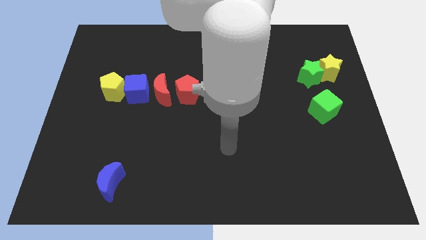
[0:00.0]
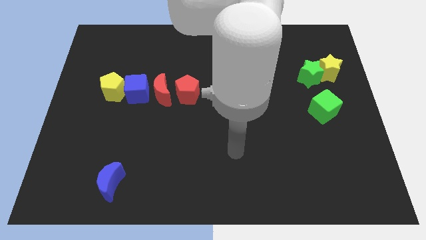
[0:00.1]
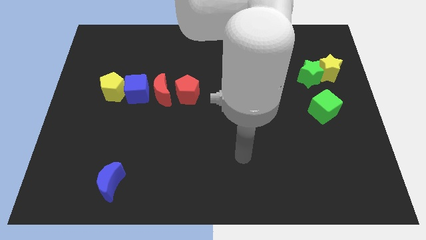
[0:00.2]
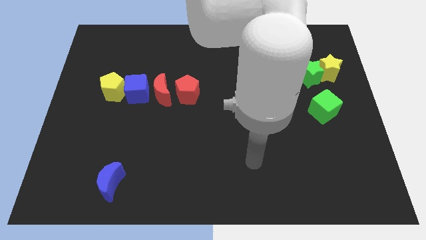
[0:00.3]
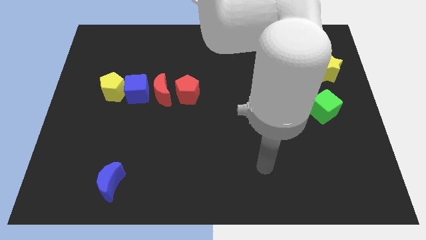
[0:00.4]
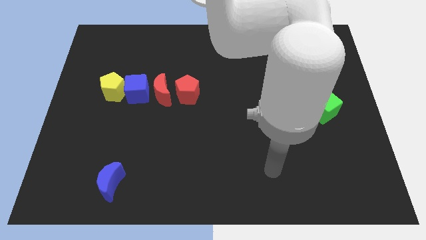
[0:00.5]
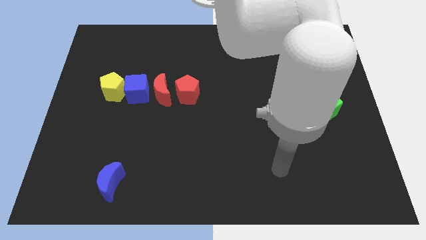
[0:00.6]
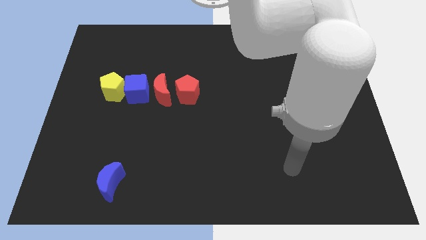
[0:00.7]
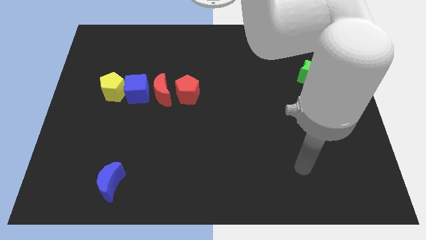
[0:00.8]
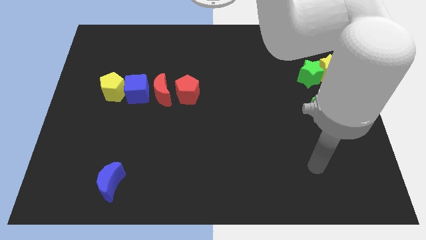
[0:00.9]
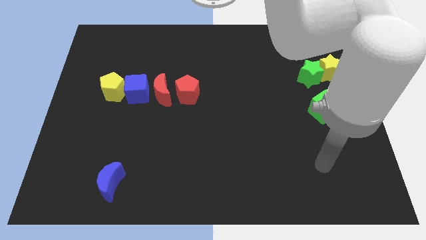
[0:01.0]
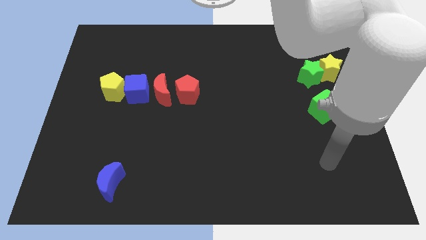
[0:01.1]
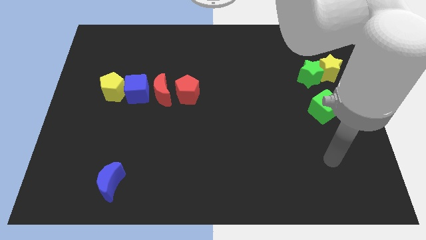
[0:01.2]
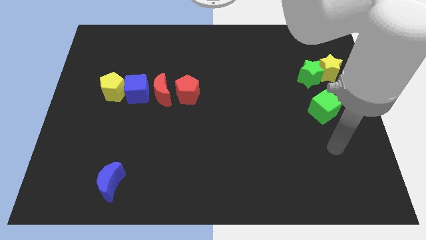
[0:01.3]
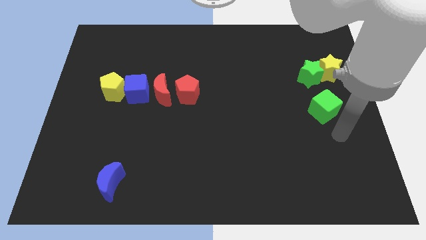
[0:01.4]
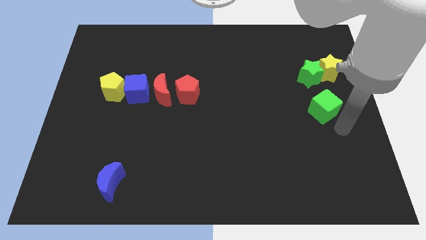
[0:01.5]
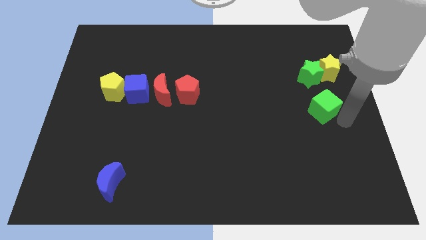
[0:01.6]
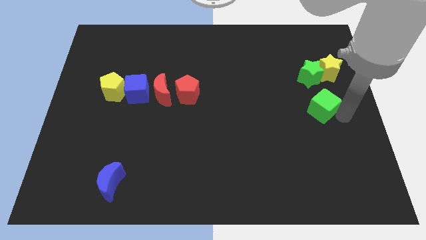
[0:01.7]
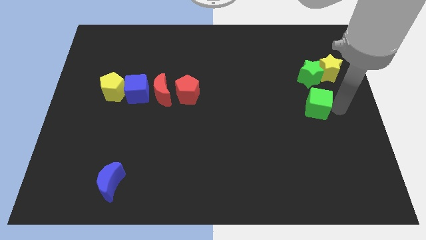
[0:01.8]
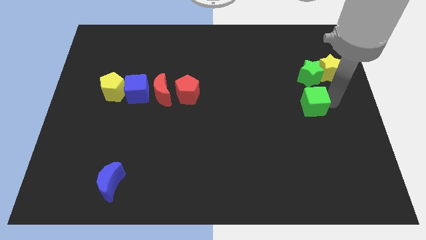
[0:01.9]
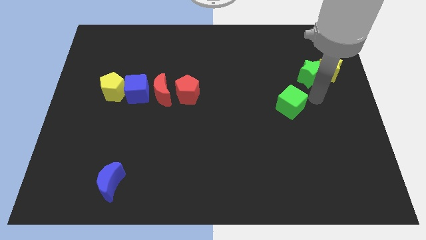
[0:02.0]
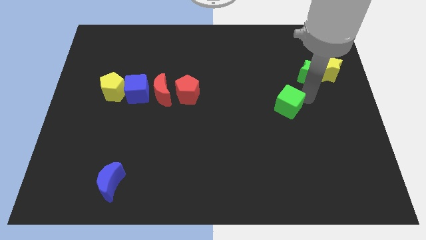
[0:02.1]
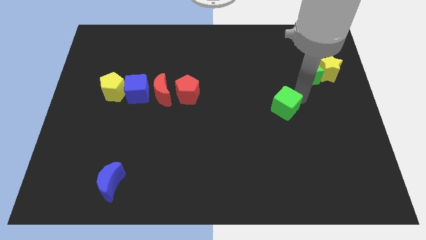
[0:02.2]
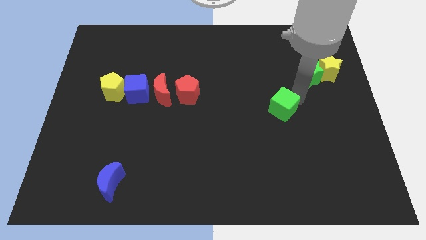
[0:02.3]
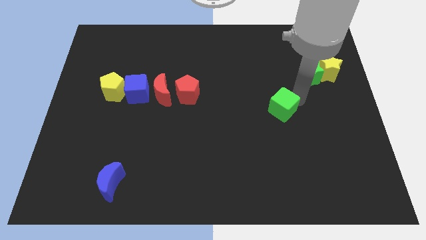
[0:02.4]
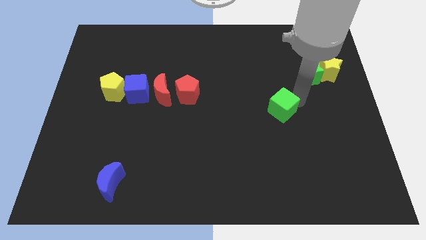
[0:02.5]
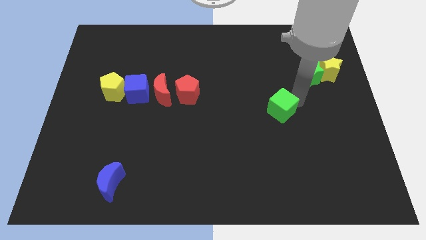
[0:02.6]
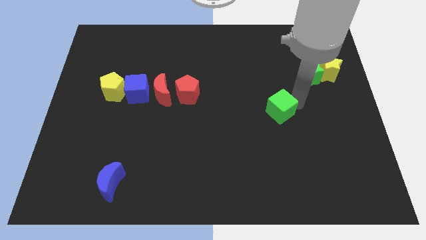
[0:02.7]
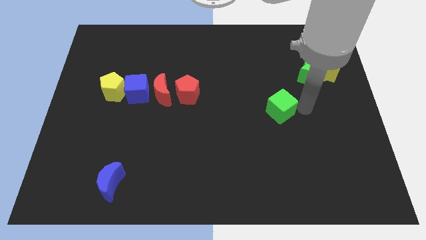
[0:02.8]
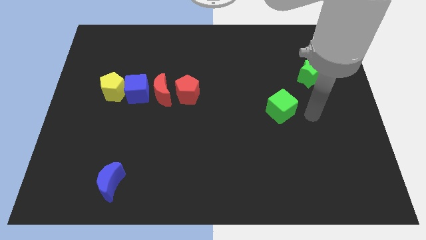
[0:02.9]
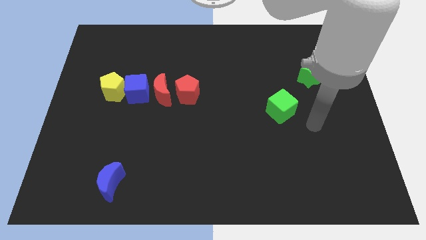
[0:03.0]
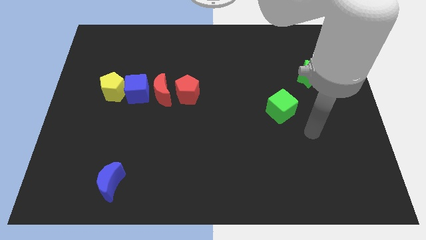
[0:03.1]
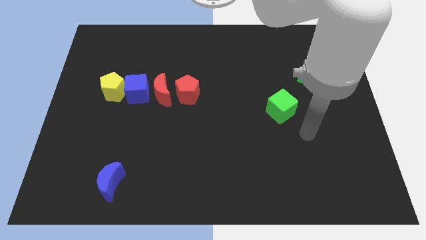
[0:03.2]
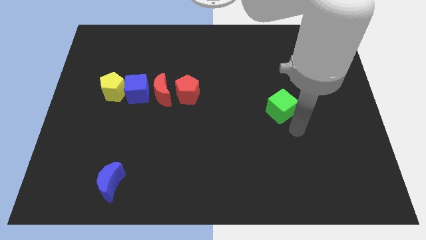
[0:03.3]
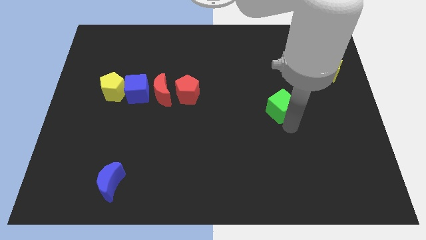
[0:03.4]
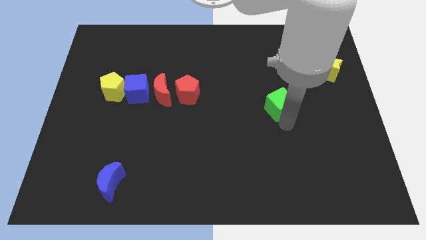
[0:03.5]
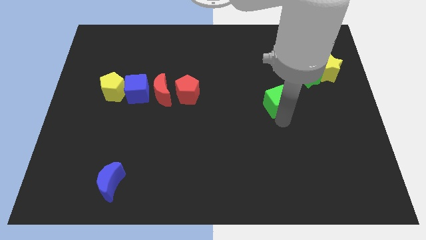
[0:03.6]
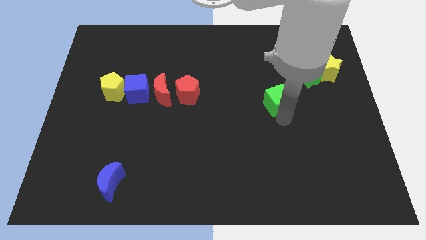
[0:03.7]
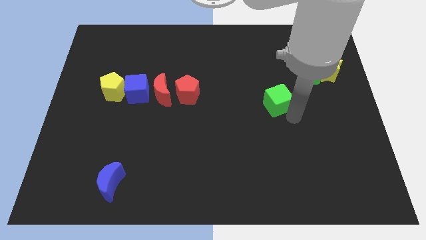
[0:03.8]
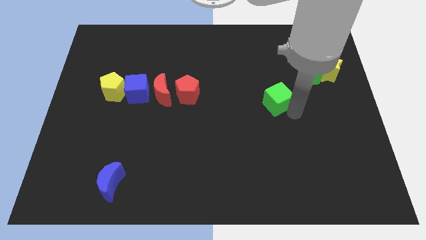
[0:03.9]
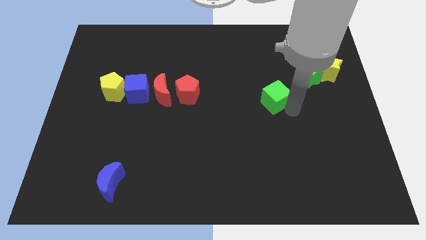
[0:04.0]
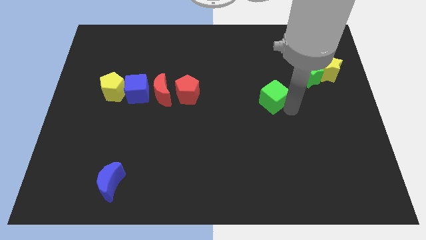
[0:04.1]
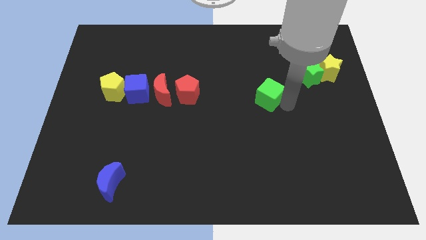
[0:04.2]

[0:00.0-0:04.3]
move green cube upwards

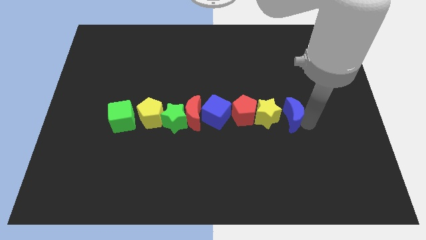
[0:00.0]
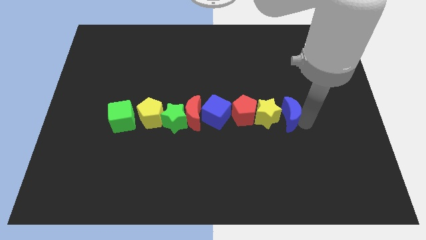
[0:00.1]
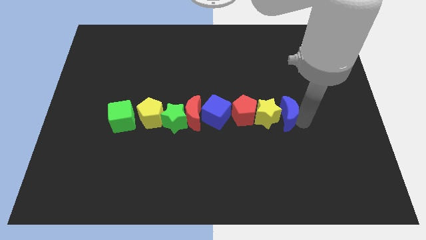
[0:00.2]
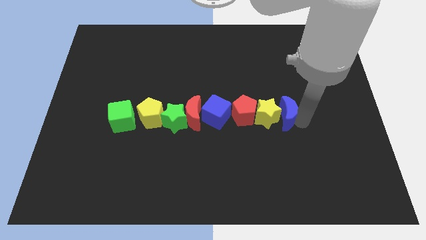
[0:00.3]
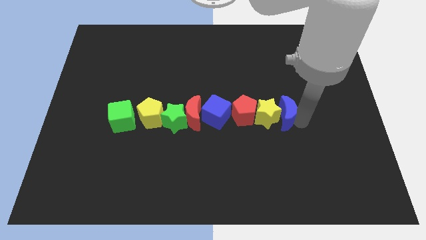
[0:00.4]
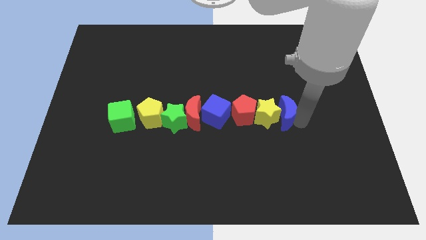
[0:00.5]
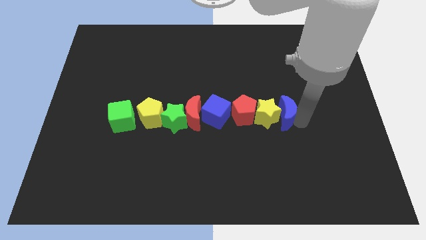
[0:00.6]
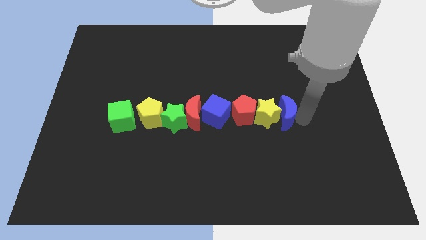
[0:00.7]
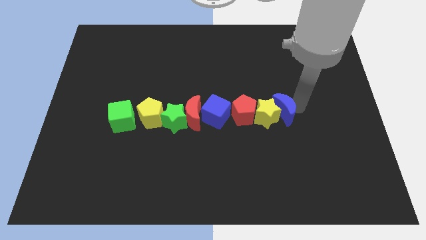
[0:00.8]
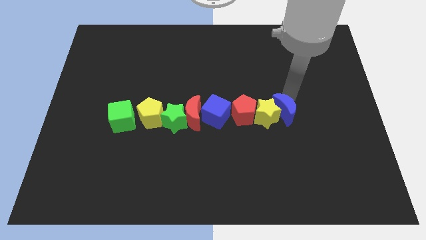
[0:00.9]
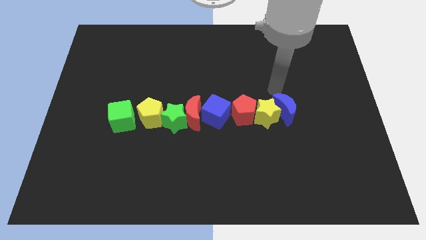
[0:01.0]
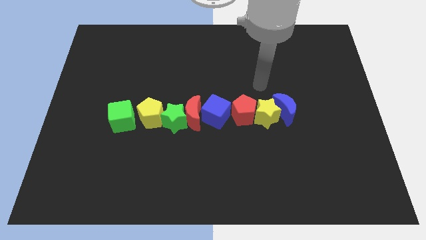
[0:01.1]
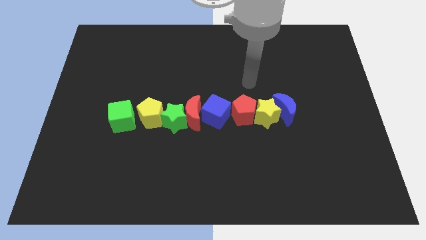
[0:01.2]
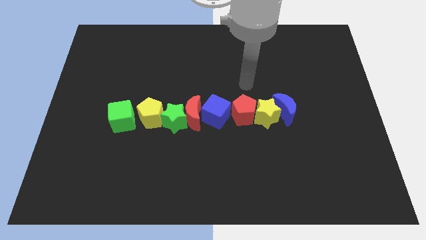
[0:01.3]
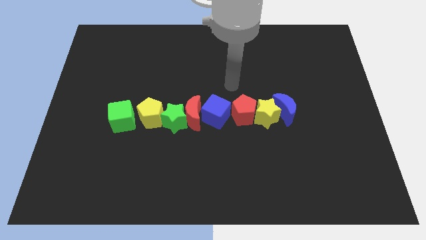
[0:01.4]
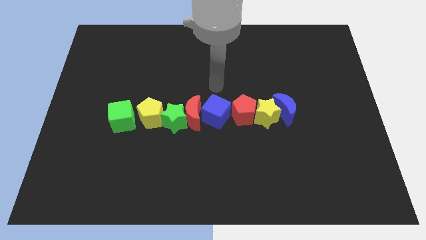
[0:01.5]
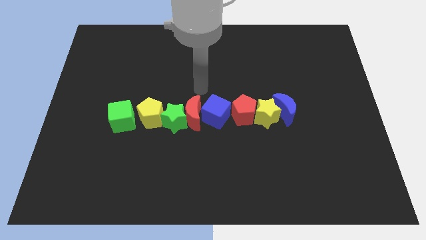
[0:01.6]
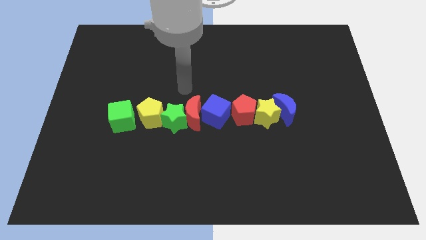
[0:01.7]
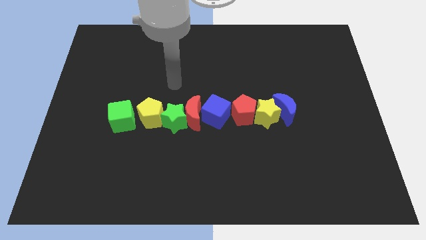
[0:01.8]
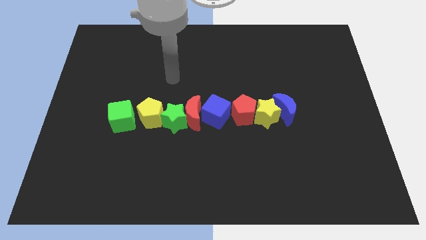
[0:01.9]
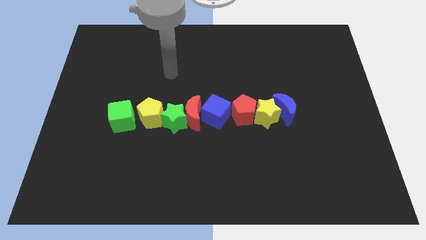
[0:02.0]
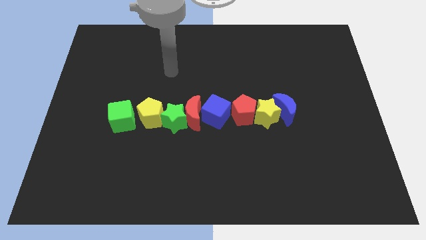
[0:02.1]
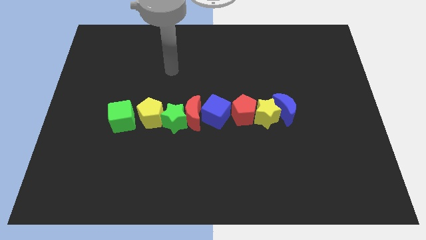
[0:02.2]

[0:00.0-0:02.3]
move your arm towards the top of green star

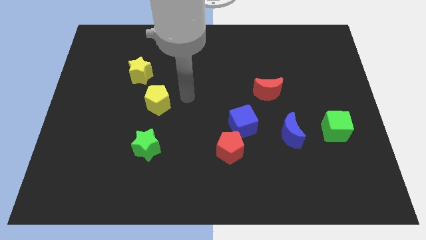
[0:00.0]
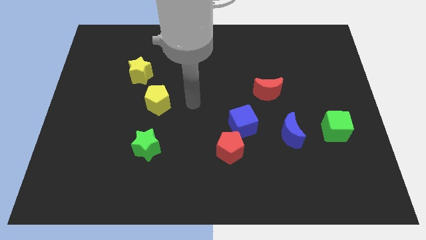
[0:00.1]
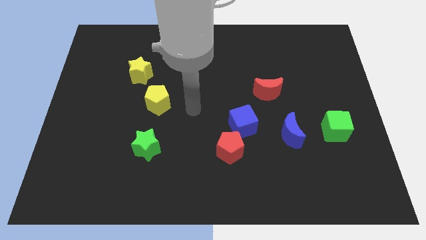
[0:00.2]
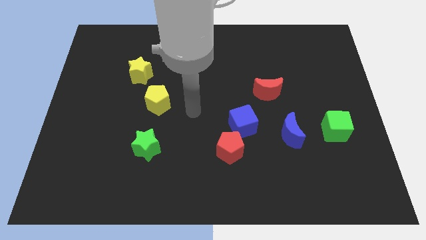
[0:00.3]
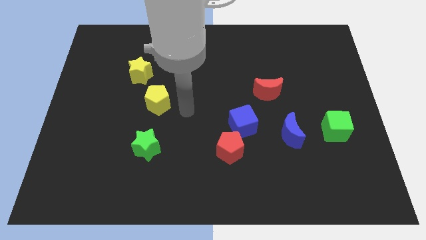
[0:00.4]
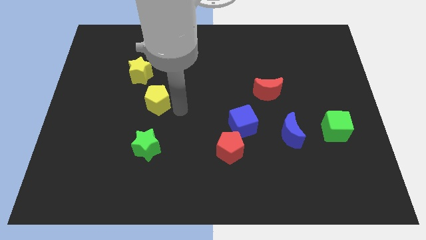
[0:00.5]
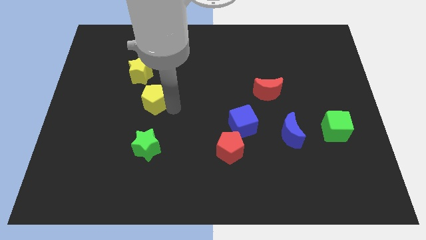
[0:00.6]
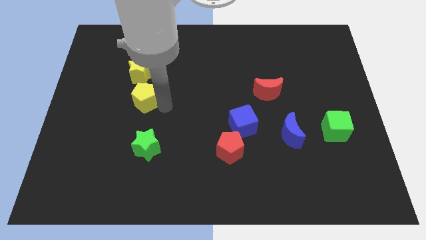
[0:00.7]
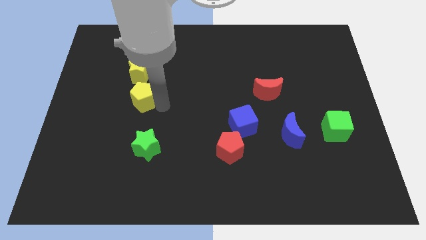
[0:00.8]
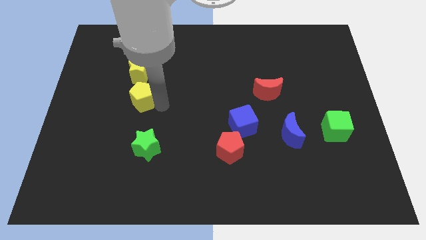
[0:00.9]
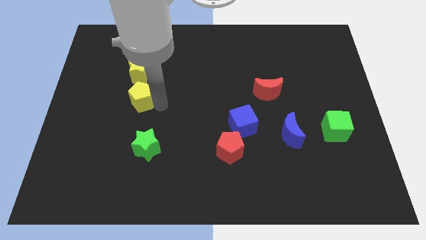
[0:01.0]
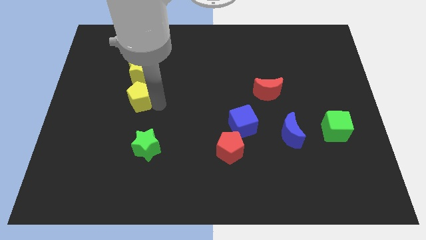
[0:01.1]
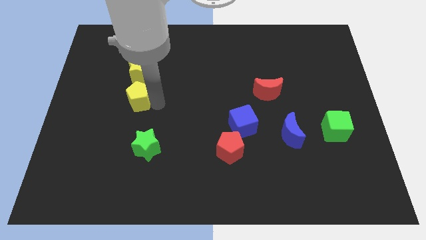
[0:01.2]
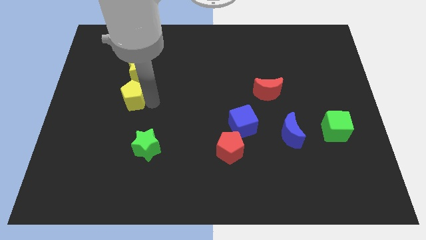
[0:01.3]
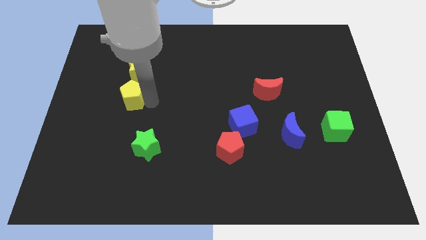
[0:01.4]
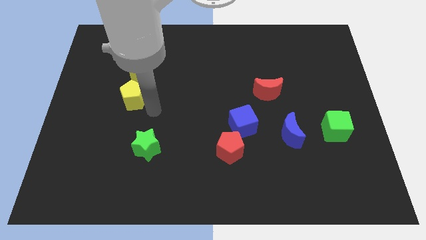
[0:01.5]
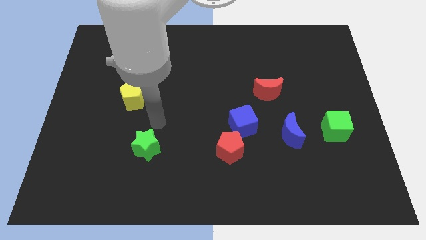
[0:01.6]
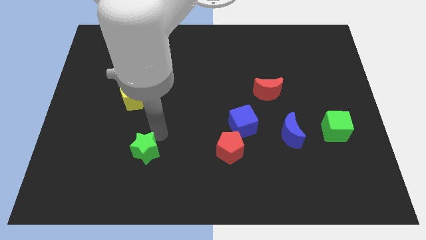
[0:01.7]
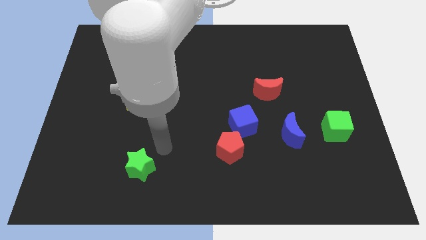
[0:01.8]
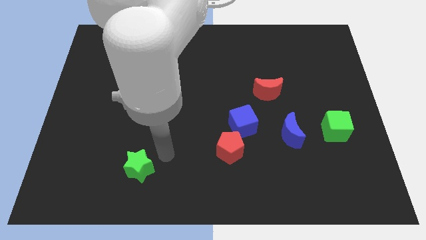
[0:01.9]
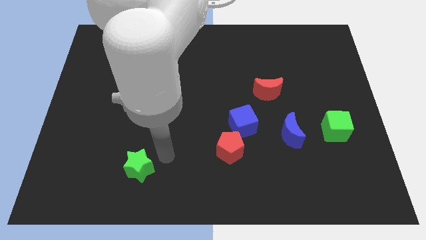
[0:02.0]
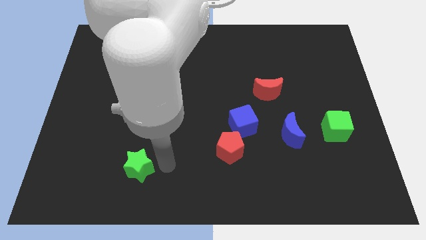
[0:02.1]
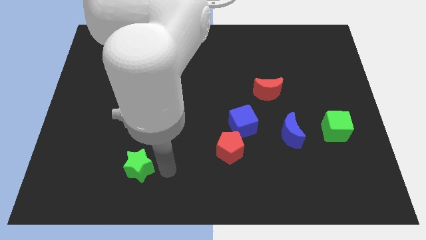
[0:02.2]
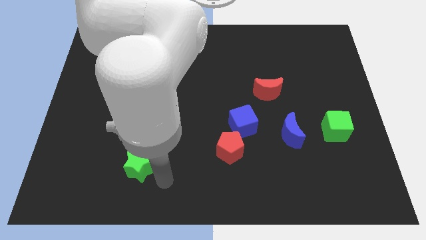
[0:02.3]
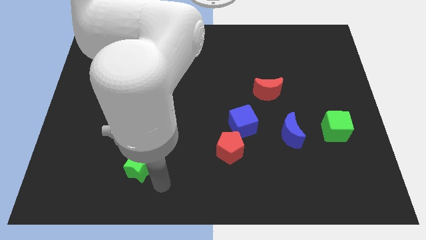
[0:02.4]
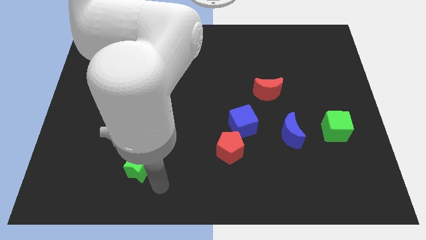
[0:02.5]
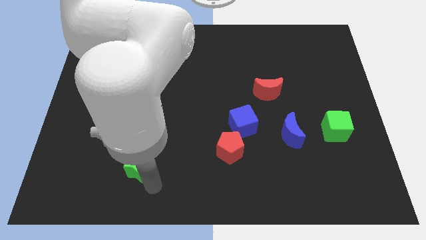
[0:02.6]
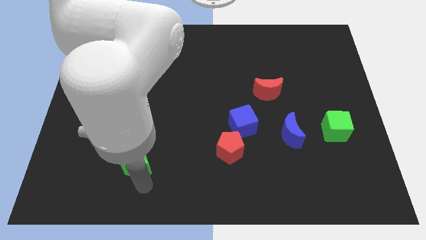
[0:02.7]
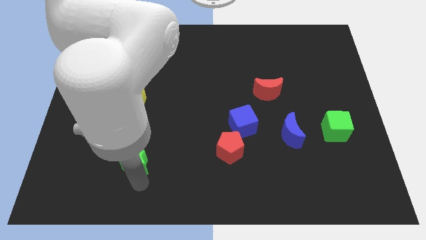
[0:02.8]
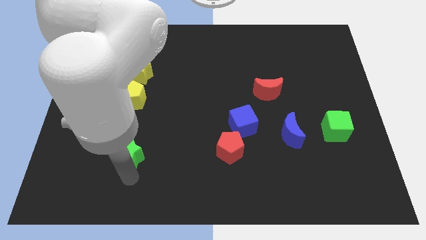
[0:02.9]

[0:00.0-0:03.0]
place the arm down to the green star
